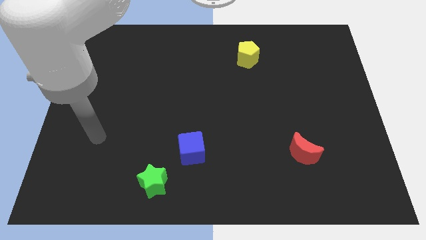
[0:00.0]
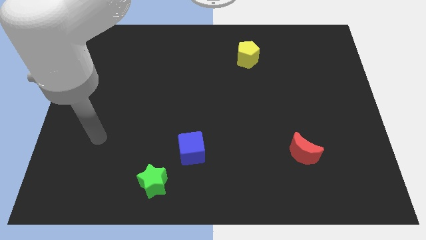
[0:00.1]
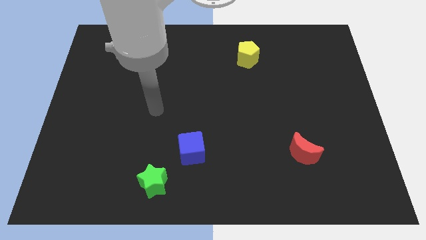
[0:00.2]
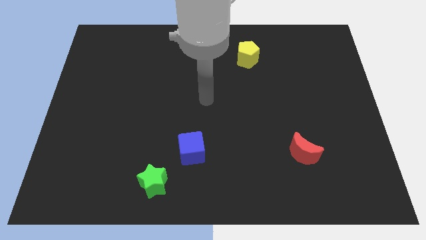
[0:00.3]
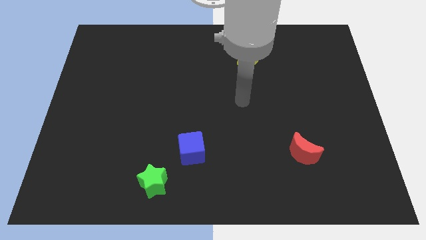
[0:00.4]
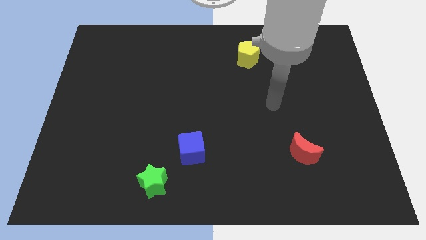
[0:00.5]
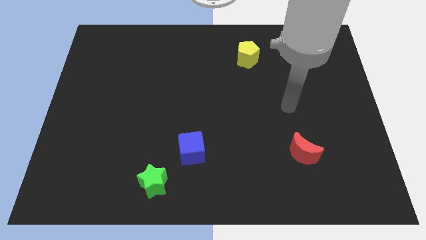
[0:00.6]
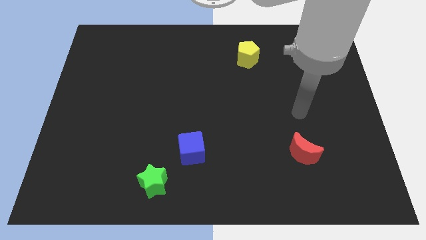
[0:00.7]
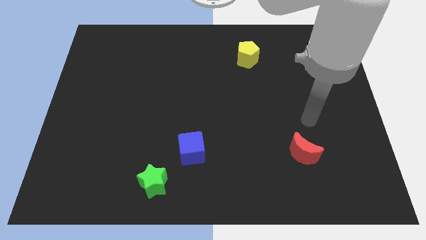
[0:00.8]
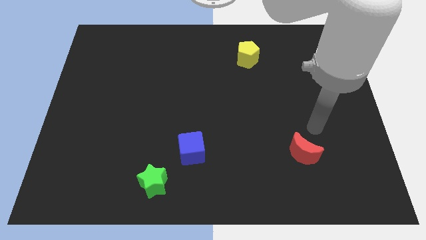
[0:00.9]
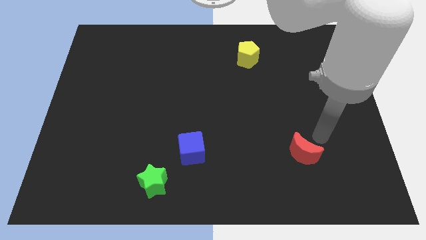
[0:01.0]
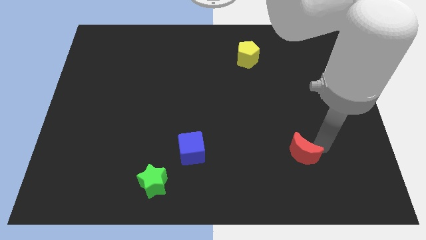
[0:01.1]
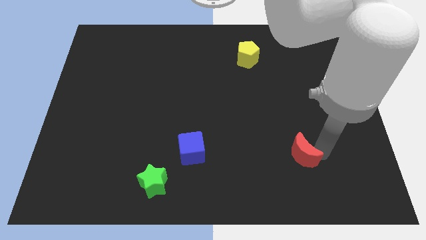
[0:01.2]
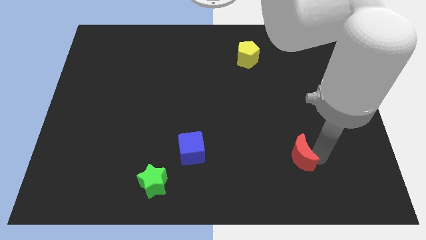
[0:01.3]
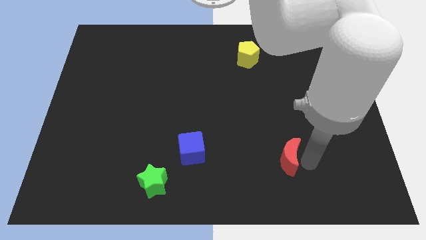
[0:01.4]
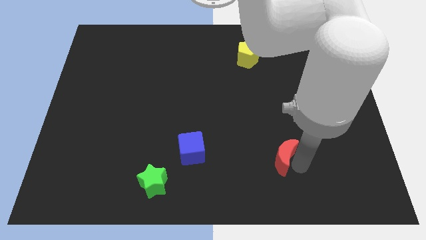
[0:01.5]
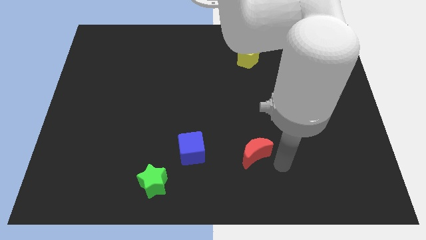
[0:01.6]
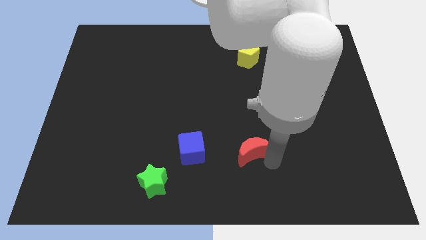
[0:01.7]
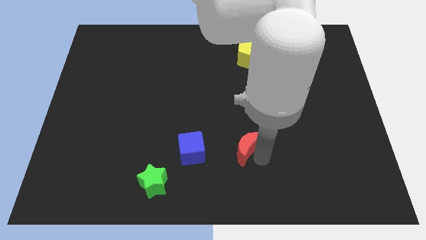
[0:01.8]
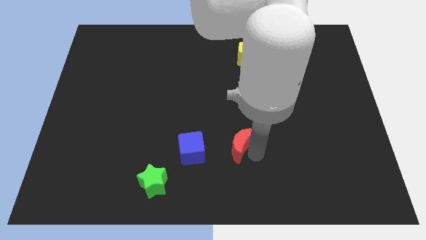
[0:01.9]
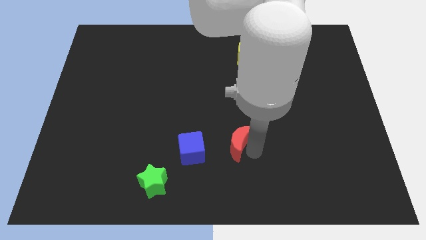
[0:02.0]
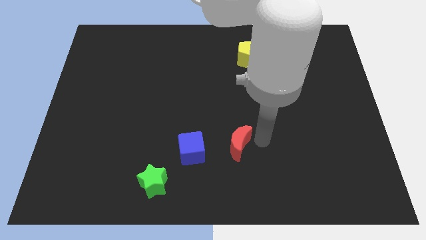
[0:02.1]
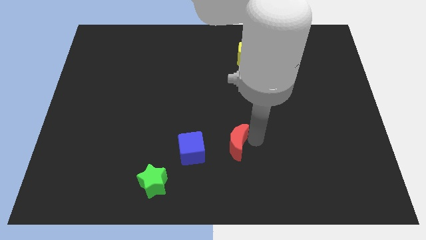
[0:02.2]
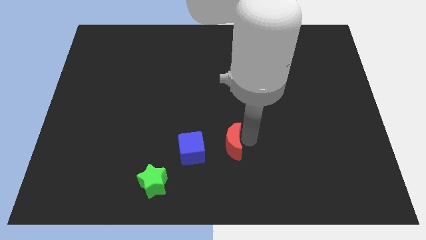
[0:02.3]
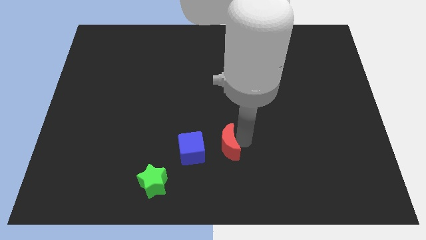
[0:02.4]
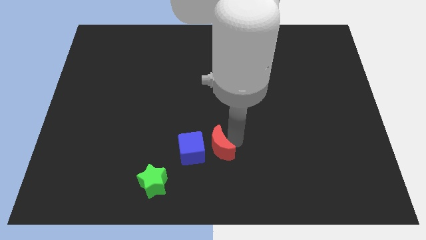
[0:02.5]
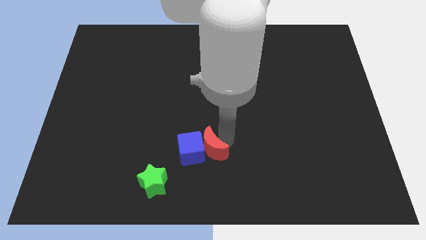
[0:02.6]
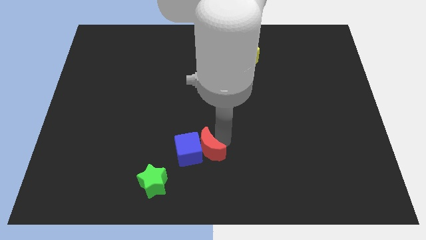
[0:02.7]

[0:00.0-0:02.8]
put the red block towards the blue cube

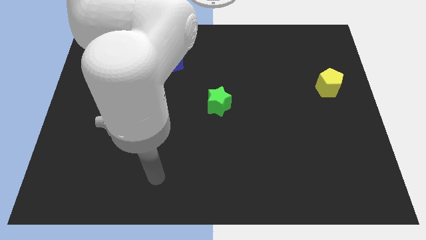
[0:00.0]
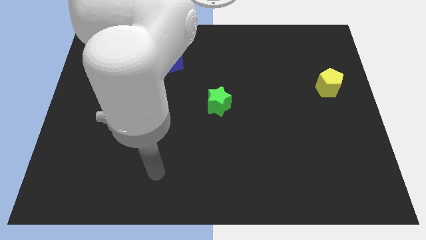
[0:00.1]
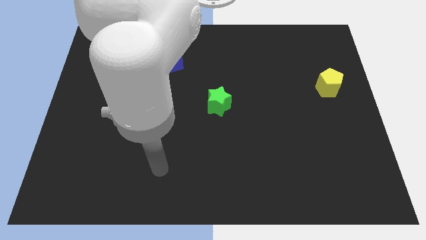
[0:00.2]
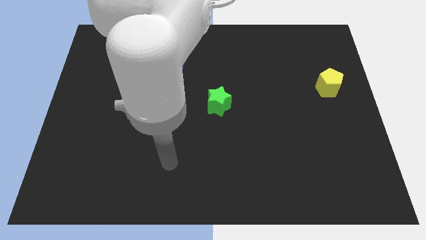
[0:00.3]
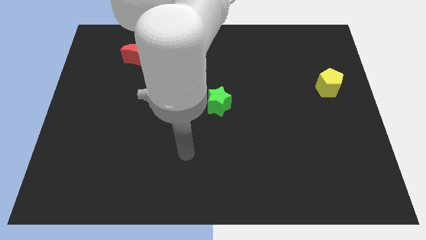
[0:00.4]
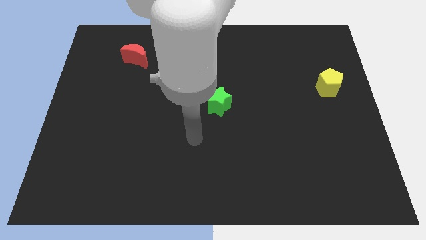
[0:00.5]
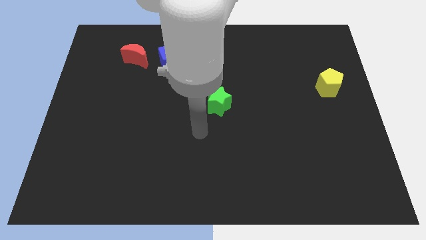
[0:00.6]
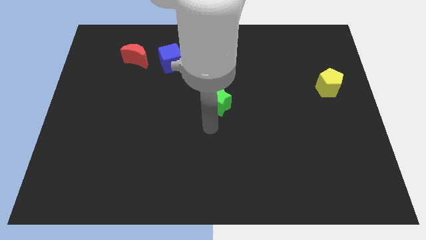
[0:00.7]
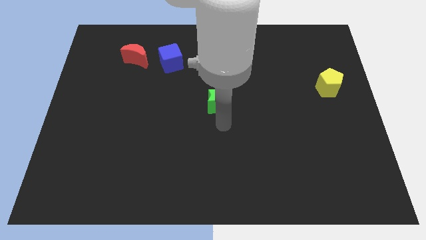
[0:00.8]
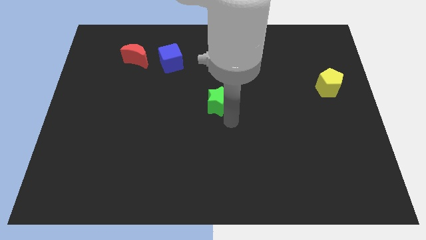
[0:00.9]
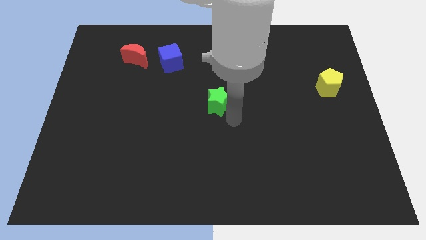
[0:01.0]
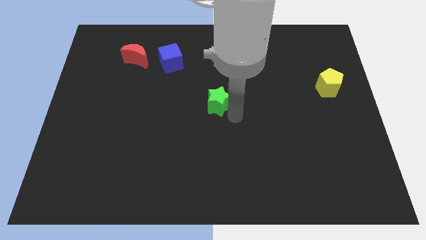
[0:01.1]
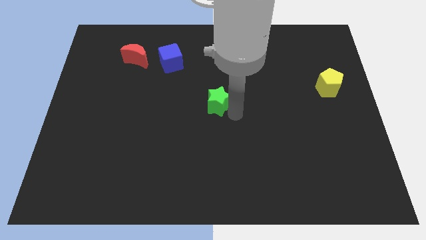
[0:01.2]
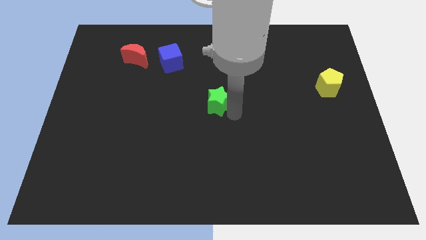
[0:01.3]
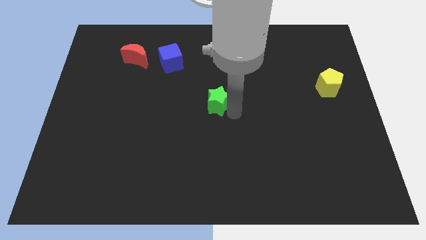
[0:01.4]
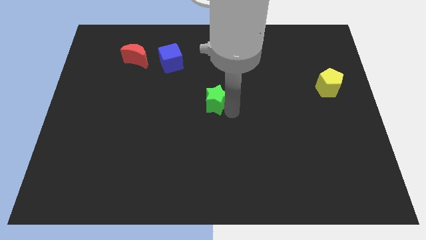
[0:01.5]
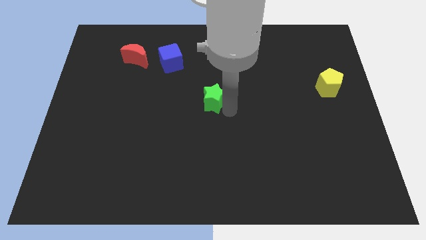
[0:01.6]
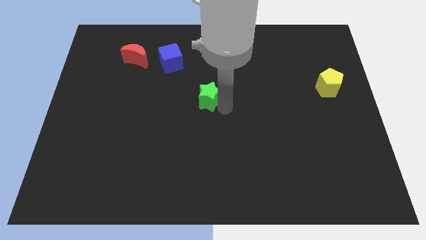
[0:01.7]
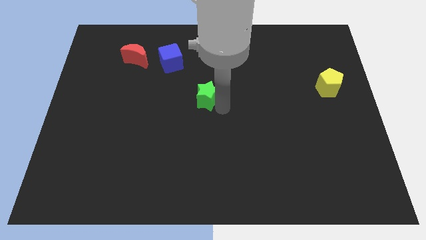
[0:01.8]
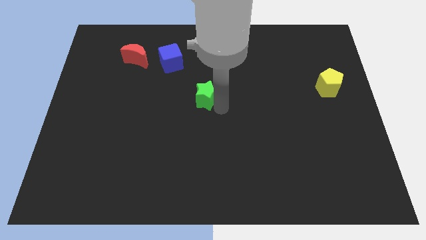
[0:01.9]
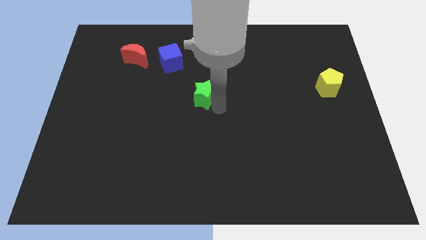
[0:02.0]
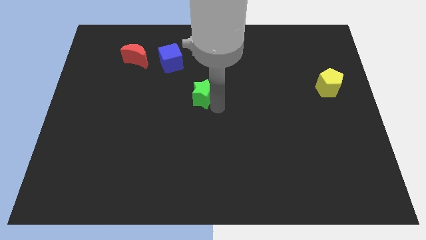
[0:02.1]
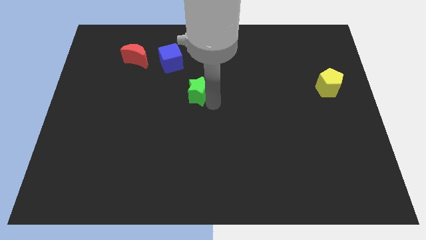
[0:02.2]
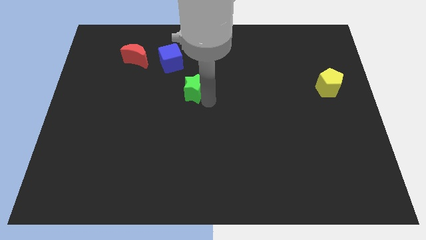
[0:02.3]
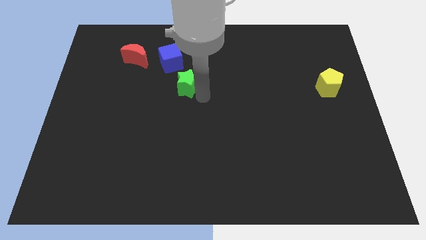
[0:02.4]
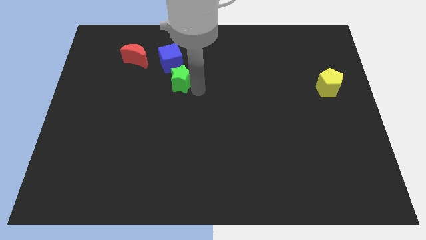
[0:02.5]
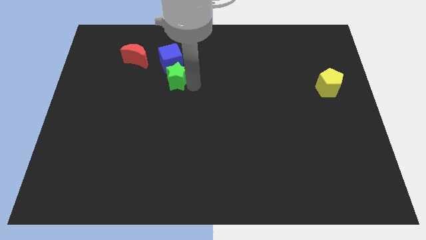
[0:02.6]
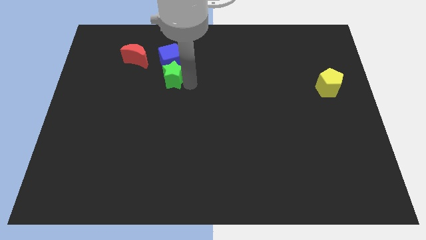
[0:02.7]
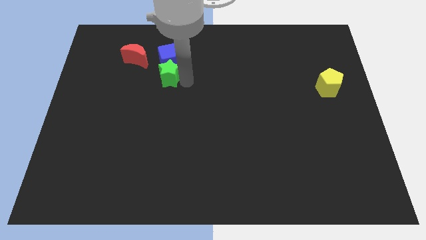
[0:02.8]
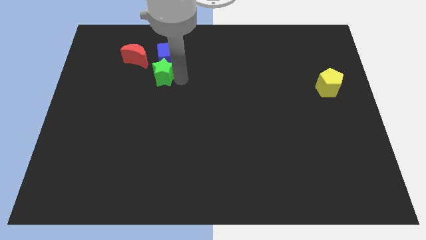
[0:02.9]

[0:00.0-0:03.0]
put the star next to the cube

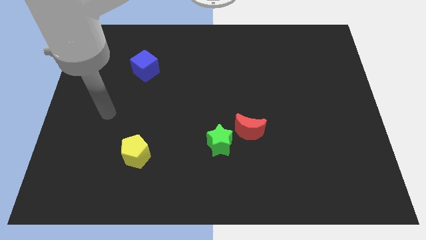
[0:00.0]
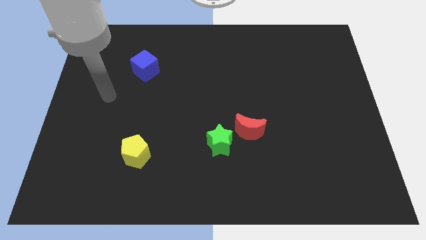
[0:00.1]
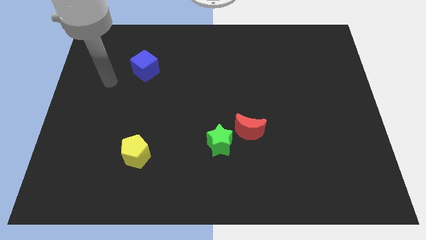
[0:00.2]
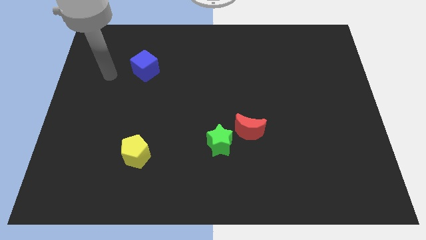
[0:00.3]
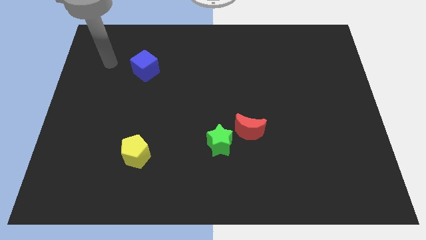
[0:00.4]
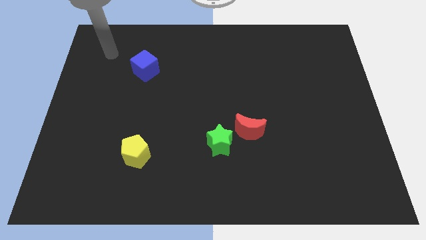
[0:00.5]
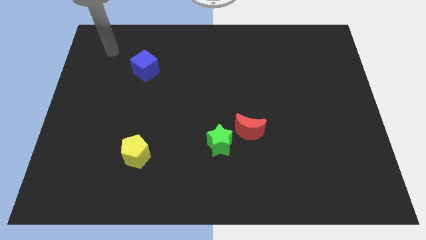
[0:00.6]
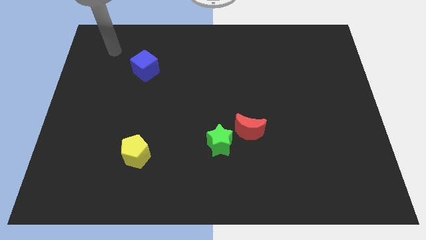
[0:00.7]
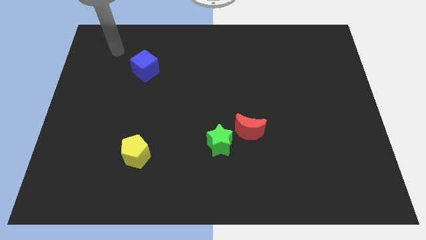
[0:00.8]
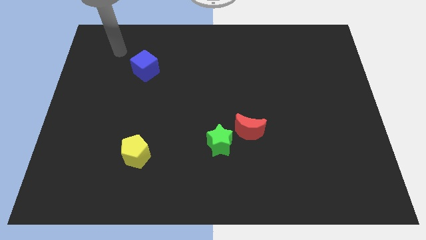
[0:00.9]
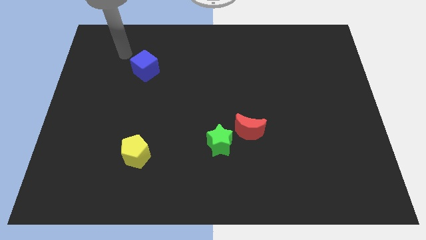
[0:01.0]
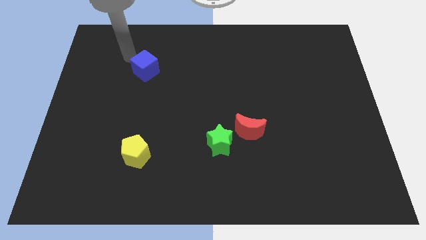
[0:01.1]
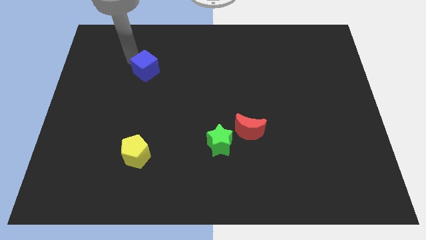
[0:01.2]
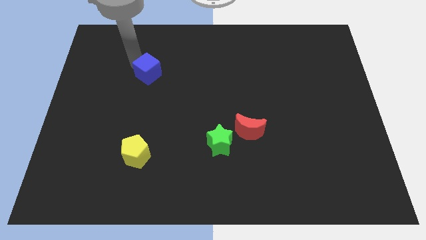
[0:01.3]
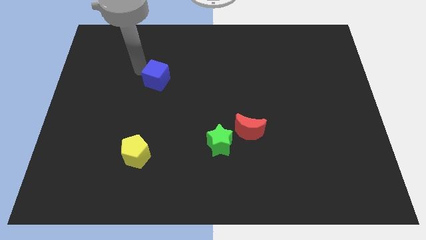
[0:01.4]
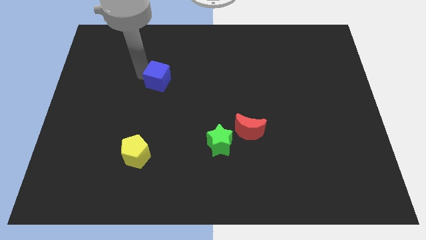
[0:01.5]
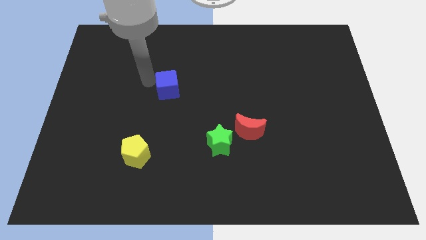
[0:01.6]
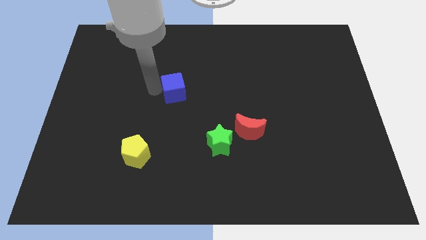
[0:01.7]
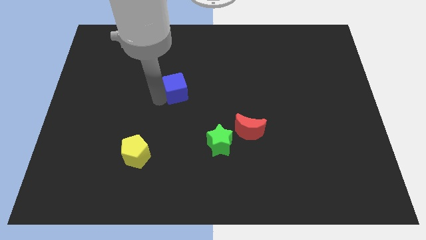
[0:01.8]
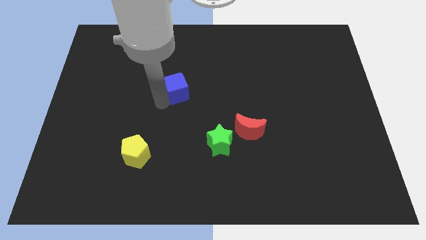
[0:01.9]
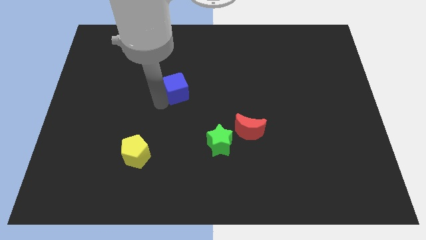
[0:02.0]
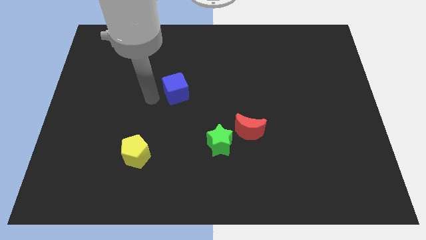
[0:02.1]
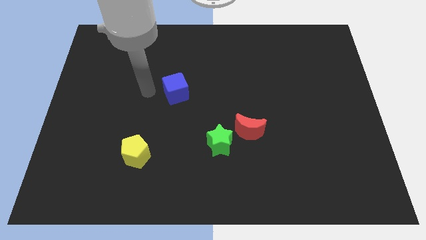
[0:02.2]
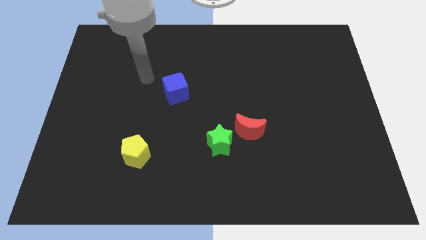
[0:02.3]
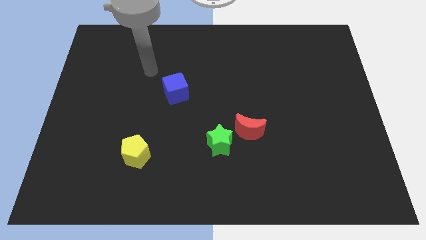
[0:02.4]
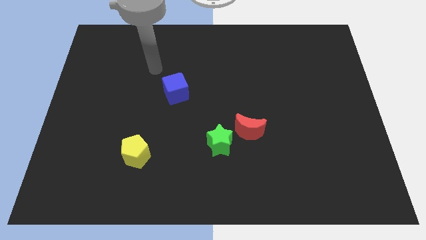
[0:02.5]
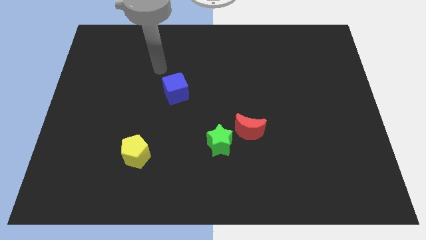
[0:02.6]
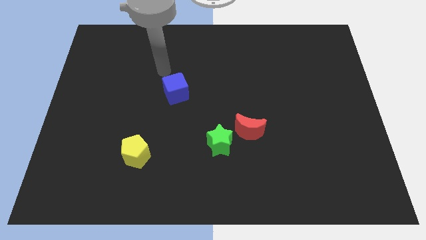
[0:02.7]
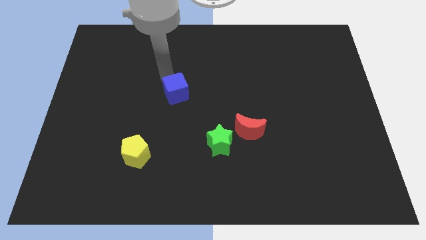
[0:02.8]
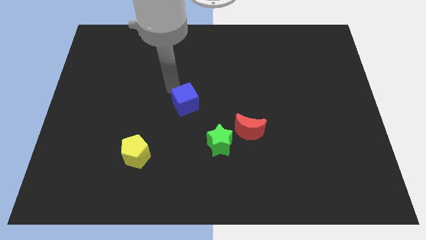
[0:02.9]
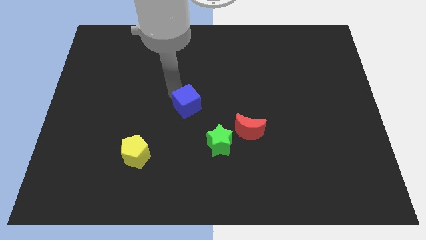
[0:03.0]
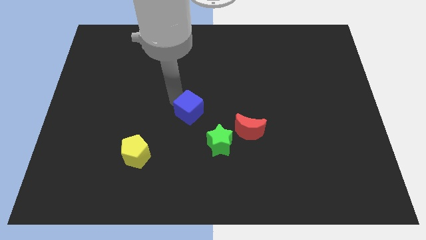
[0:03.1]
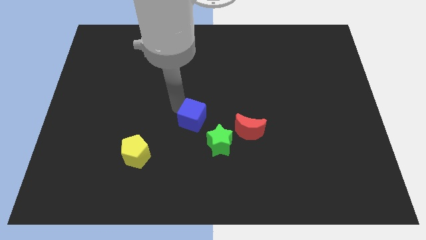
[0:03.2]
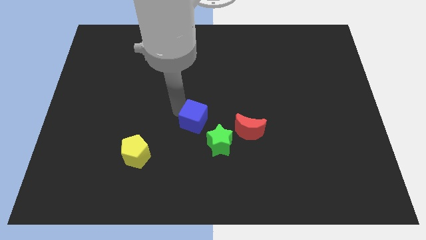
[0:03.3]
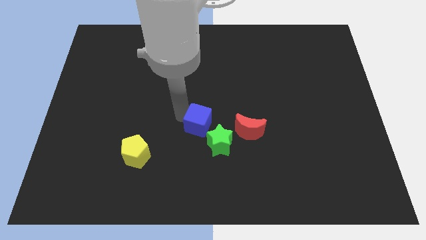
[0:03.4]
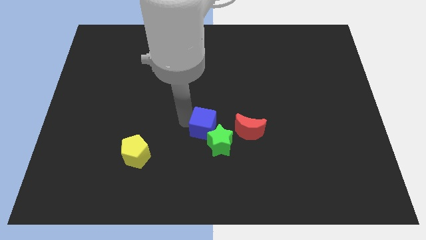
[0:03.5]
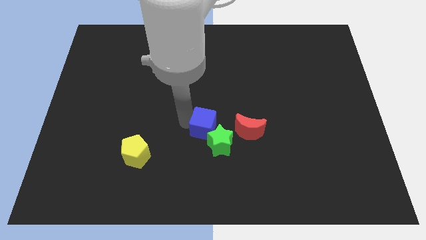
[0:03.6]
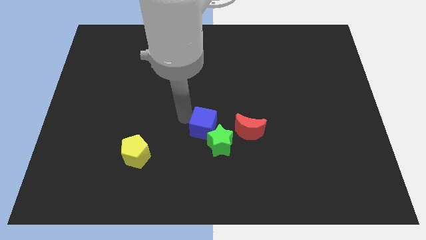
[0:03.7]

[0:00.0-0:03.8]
push the blue cube towards the green star
